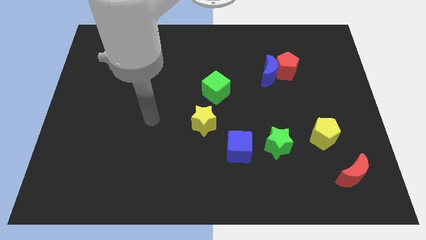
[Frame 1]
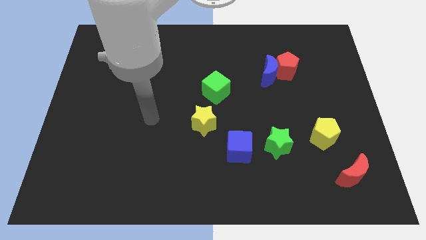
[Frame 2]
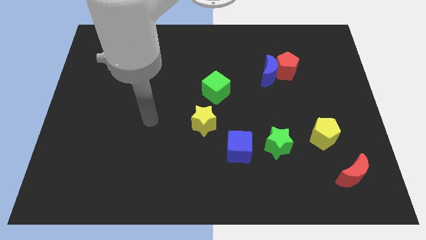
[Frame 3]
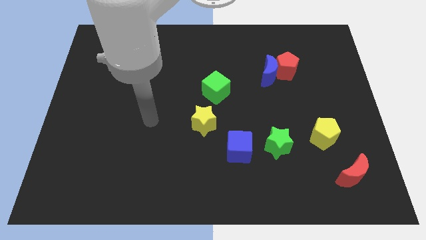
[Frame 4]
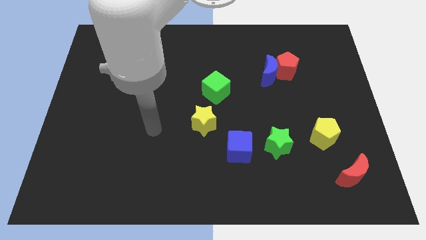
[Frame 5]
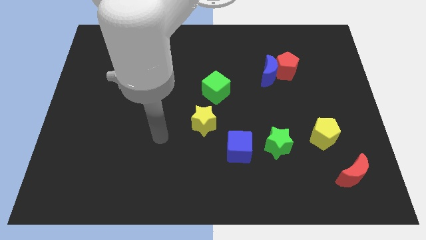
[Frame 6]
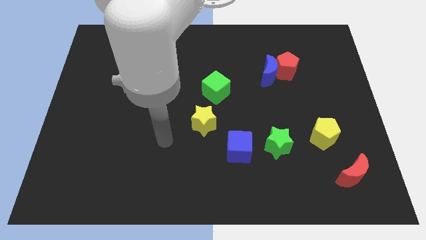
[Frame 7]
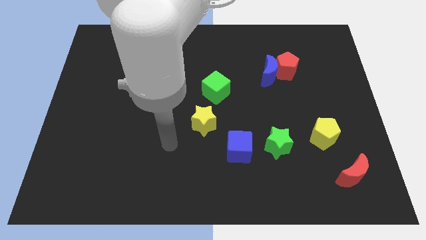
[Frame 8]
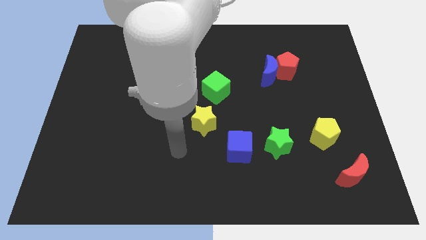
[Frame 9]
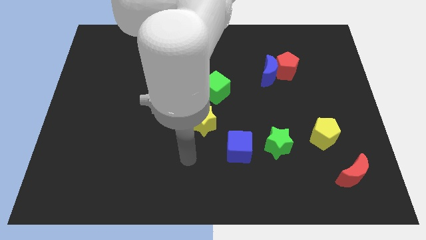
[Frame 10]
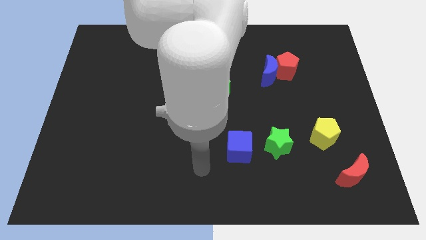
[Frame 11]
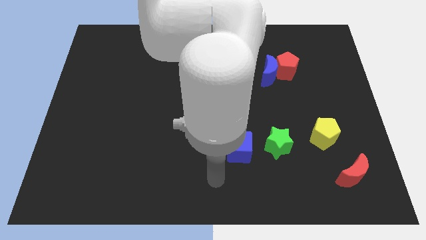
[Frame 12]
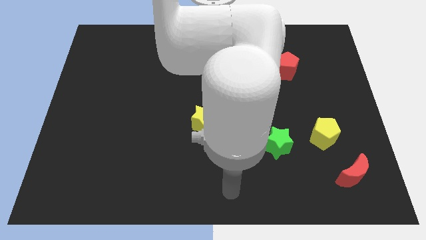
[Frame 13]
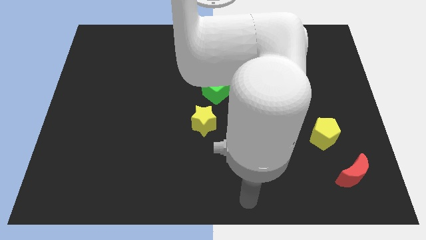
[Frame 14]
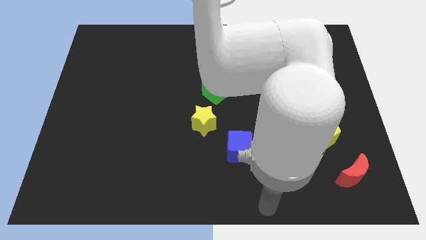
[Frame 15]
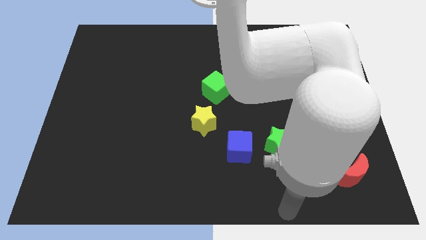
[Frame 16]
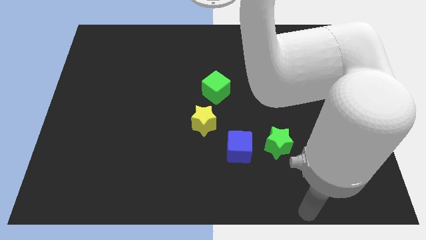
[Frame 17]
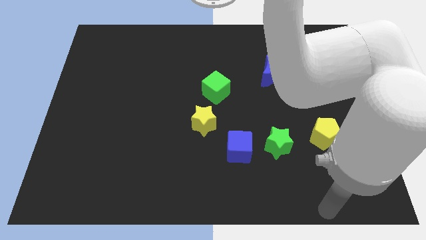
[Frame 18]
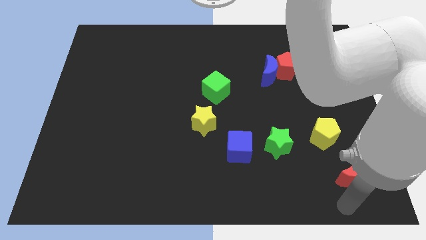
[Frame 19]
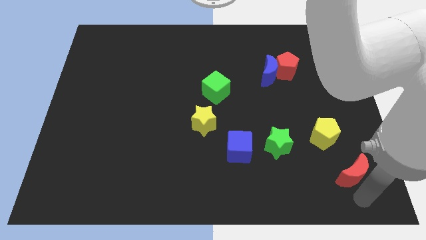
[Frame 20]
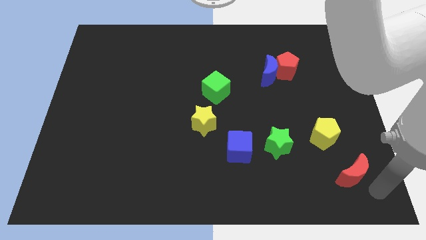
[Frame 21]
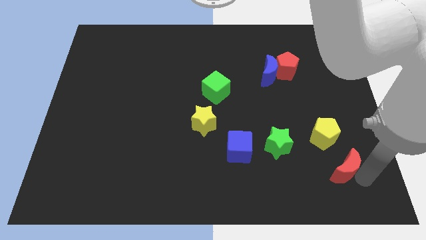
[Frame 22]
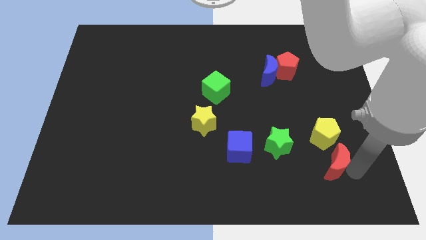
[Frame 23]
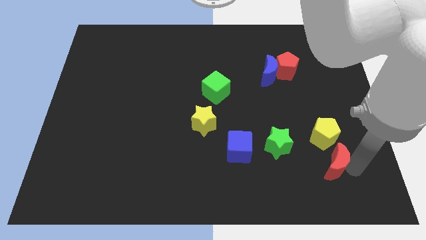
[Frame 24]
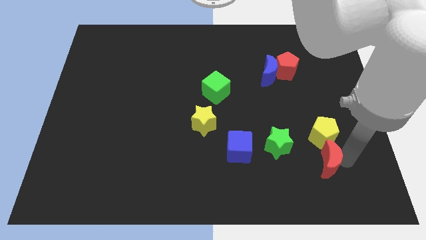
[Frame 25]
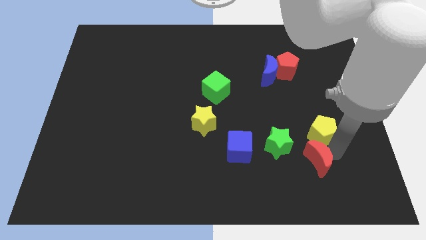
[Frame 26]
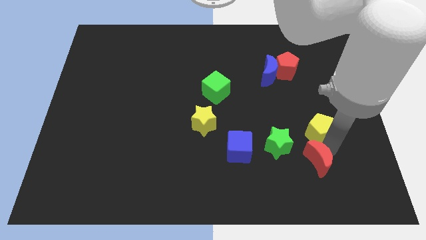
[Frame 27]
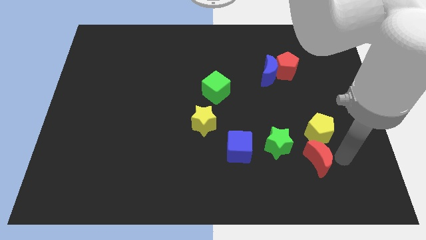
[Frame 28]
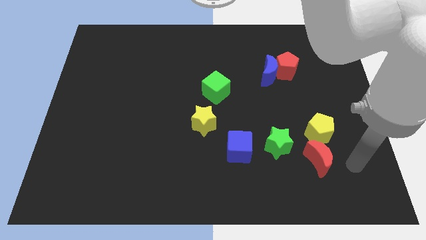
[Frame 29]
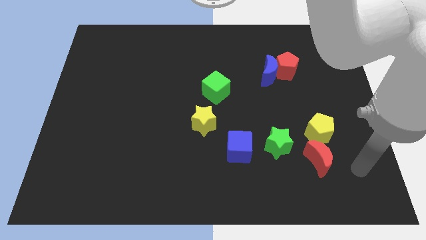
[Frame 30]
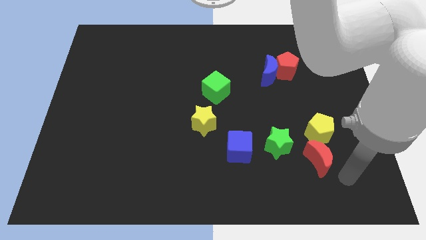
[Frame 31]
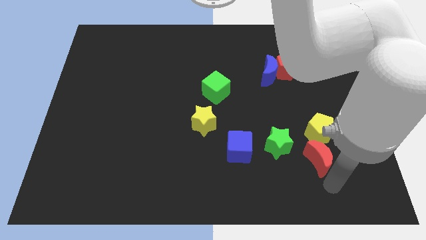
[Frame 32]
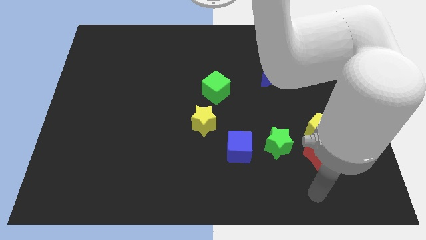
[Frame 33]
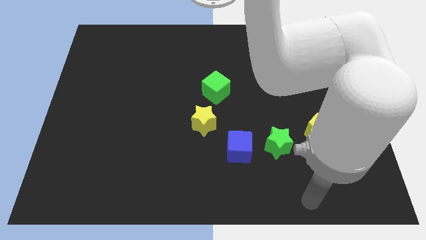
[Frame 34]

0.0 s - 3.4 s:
place the red moon under the yellow pentagon

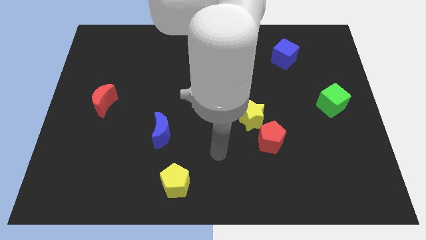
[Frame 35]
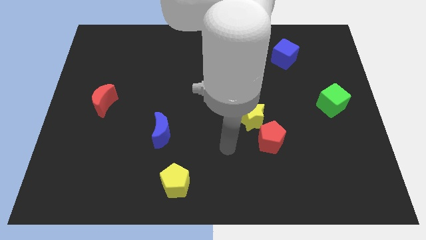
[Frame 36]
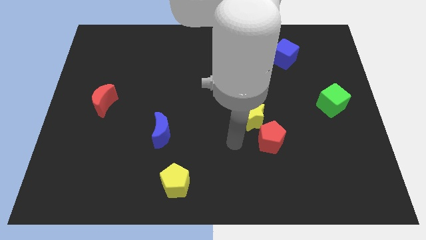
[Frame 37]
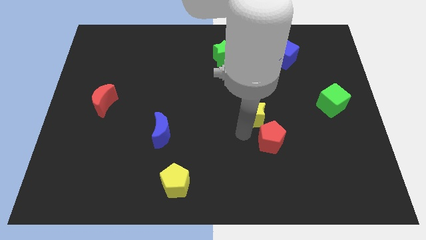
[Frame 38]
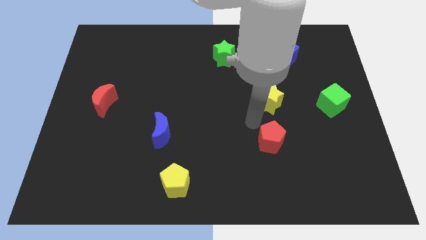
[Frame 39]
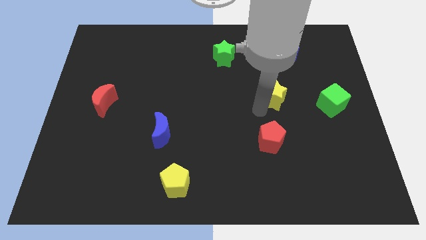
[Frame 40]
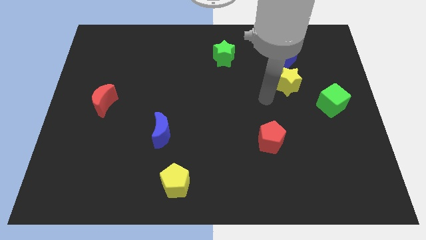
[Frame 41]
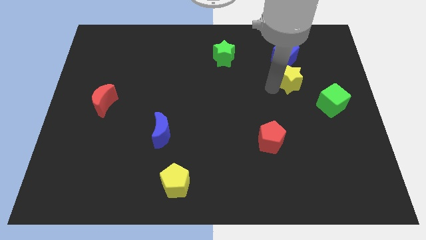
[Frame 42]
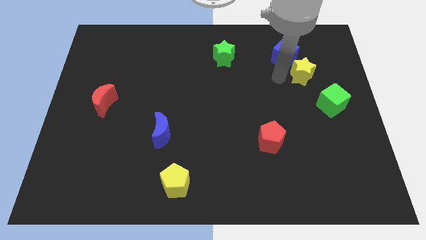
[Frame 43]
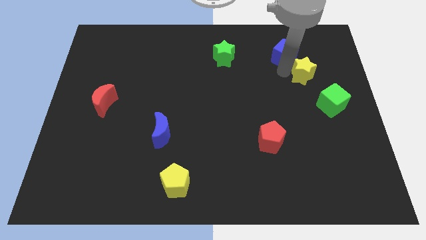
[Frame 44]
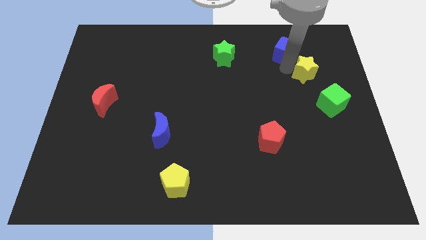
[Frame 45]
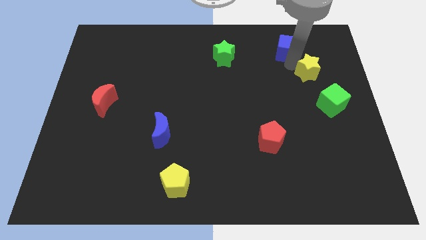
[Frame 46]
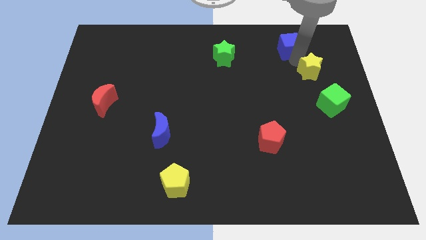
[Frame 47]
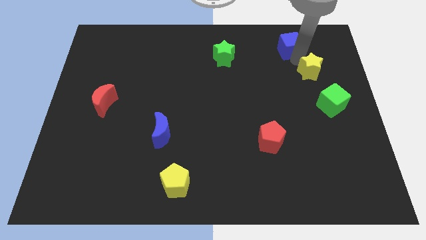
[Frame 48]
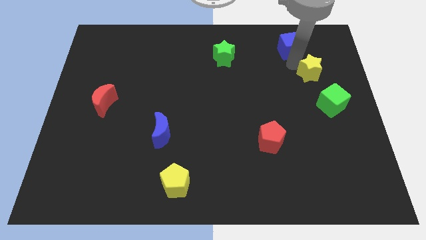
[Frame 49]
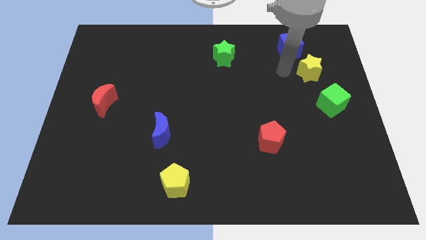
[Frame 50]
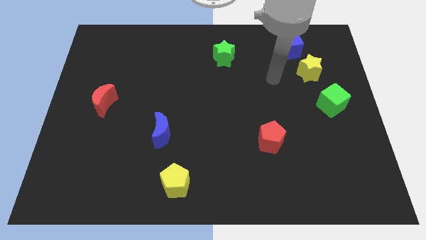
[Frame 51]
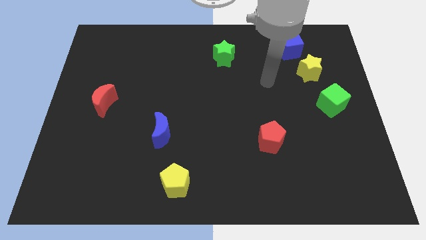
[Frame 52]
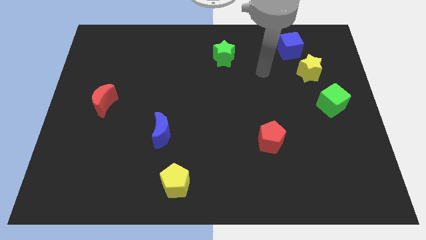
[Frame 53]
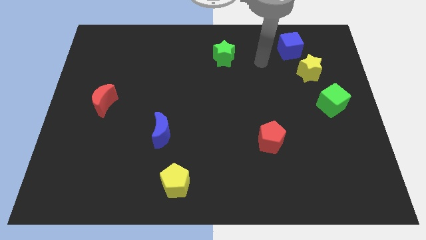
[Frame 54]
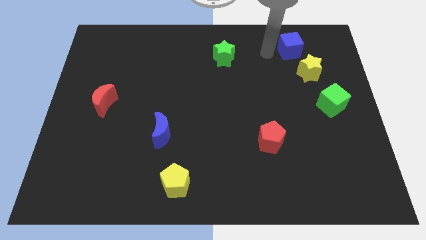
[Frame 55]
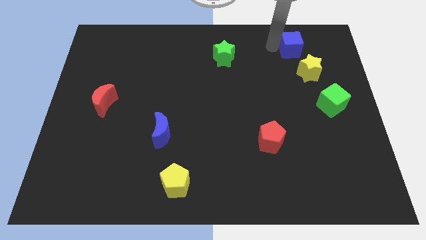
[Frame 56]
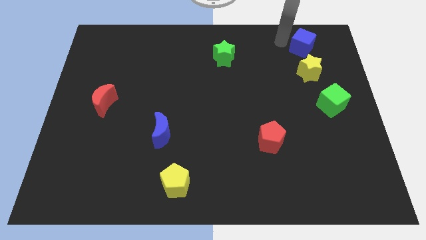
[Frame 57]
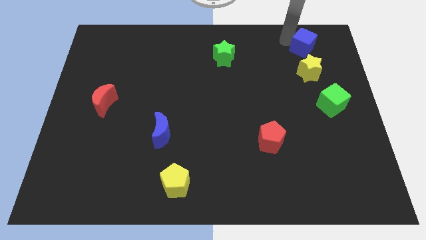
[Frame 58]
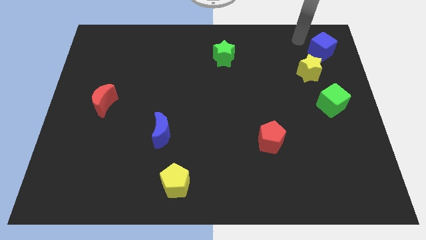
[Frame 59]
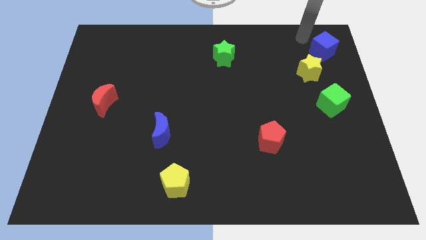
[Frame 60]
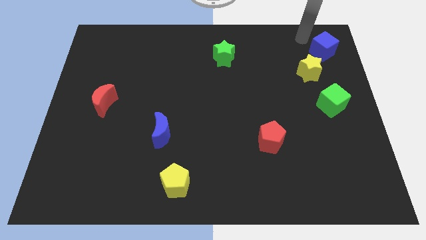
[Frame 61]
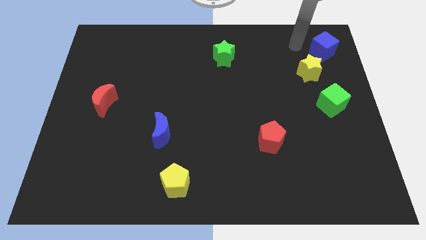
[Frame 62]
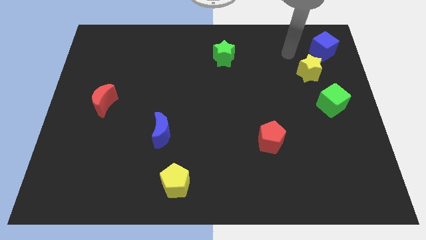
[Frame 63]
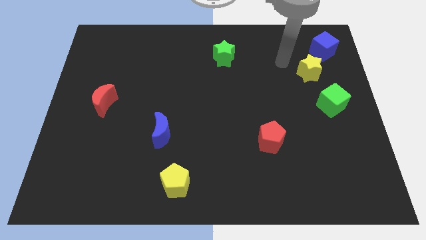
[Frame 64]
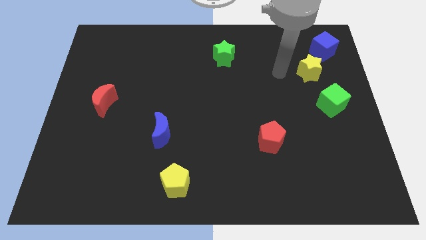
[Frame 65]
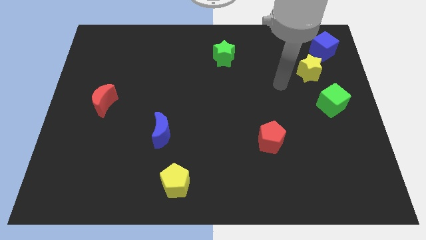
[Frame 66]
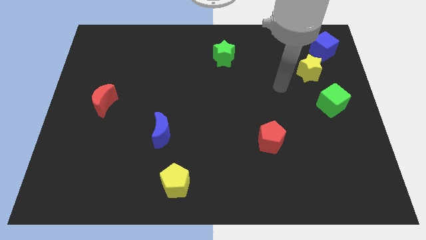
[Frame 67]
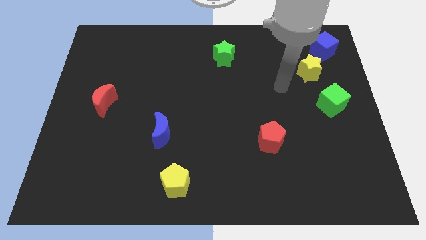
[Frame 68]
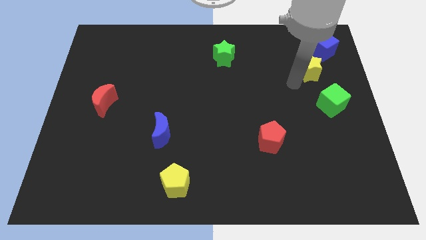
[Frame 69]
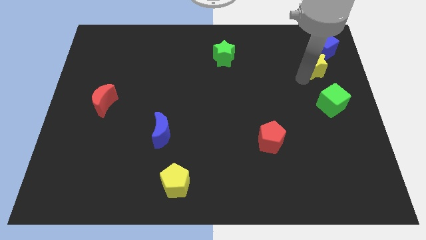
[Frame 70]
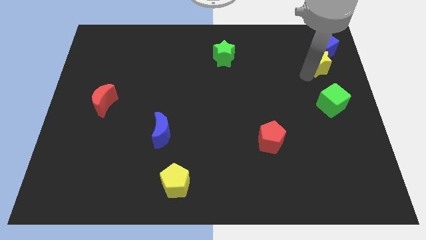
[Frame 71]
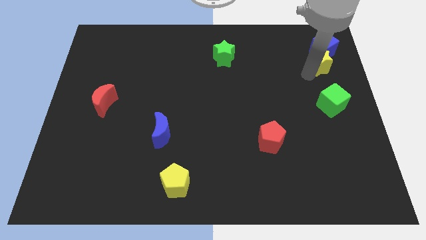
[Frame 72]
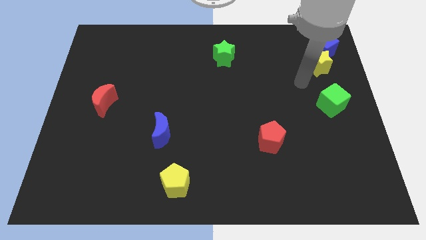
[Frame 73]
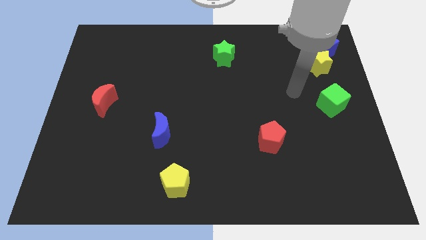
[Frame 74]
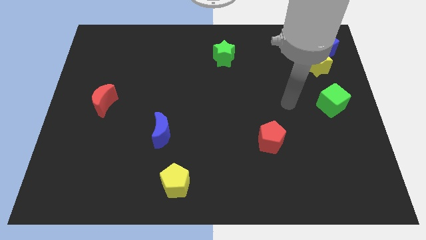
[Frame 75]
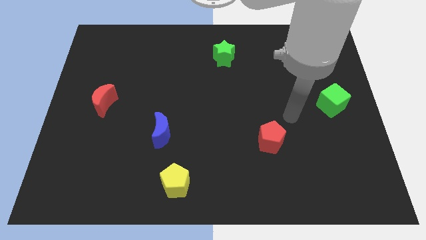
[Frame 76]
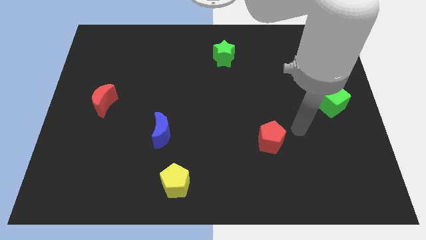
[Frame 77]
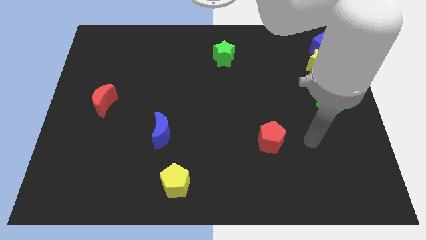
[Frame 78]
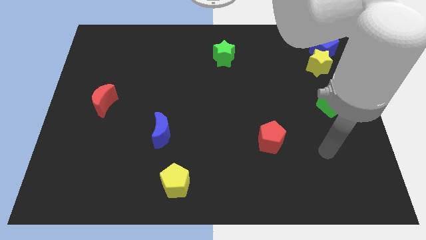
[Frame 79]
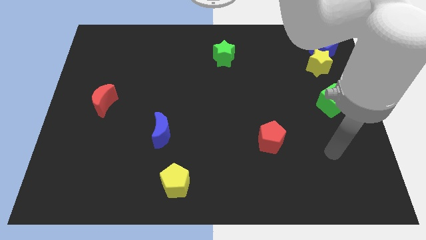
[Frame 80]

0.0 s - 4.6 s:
push the blue cube and yellow star to the top right corner of the board

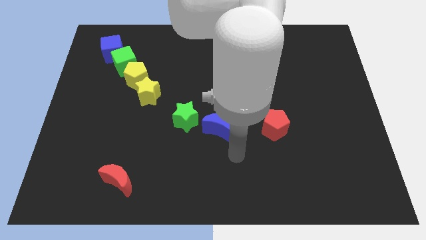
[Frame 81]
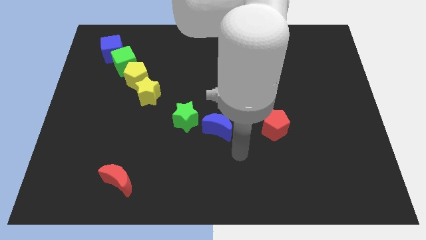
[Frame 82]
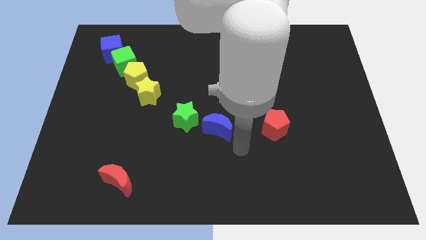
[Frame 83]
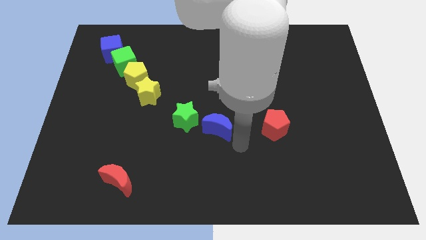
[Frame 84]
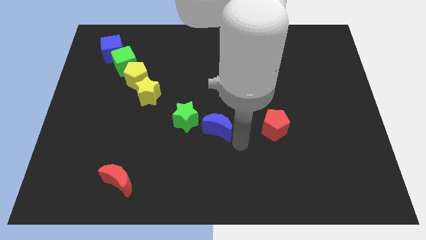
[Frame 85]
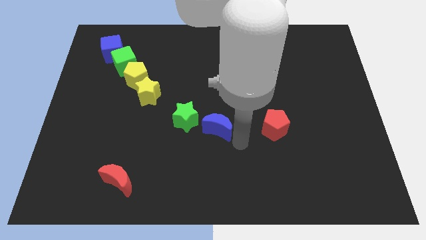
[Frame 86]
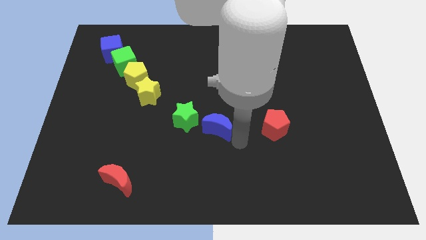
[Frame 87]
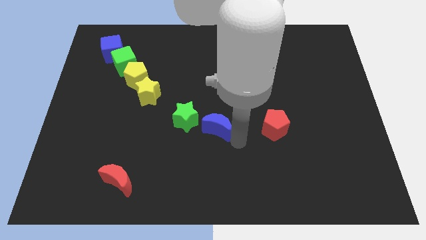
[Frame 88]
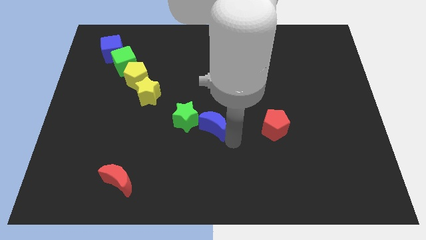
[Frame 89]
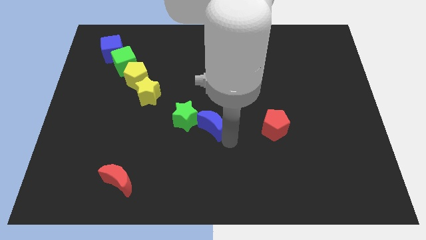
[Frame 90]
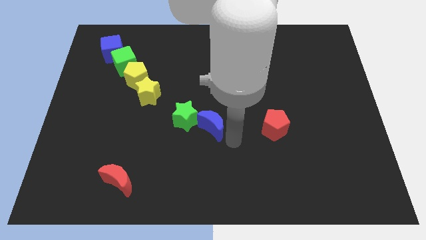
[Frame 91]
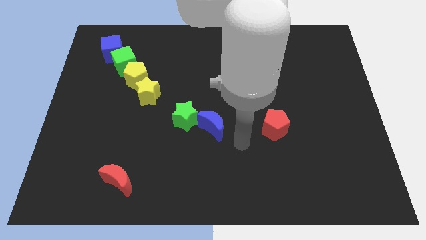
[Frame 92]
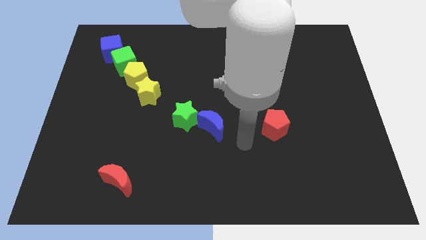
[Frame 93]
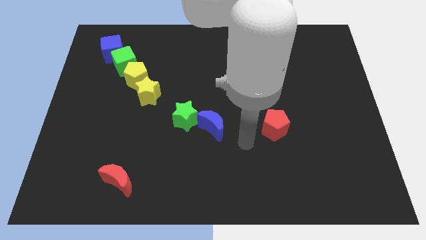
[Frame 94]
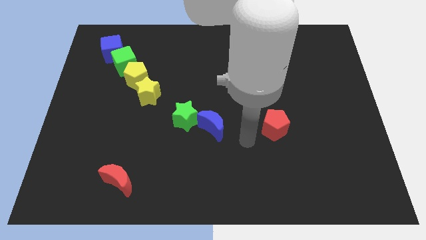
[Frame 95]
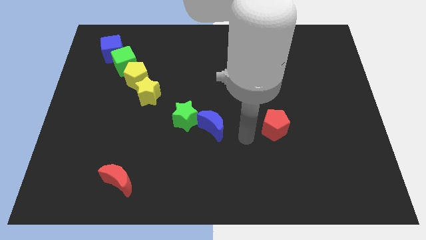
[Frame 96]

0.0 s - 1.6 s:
place the blue moon on the right side of the green star
